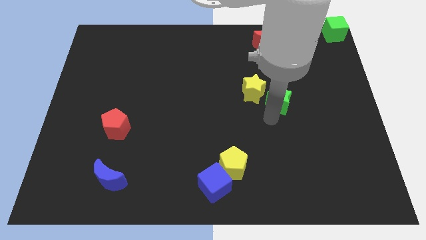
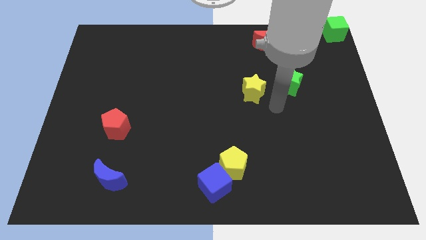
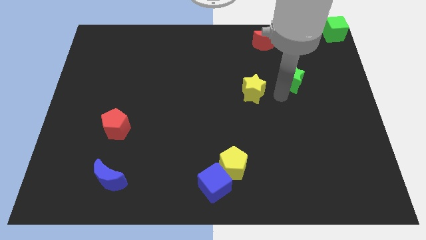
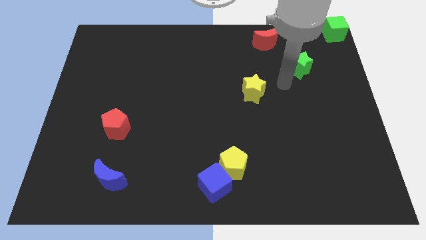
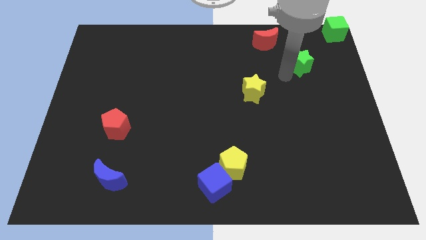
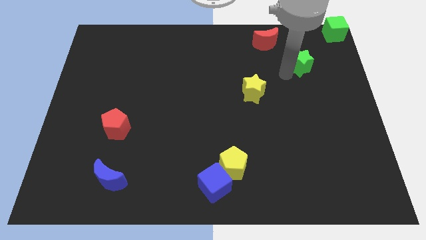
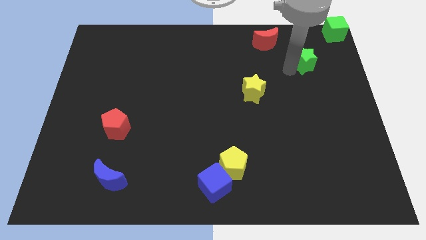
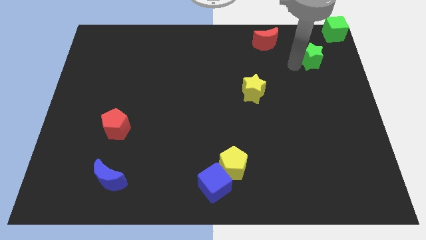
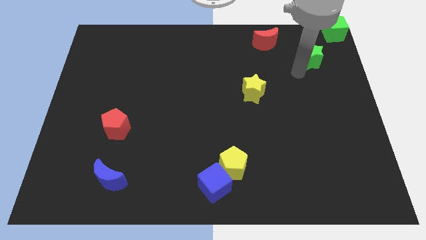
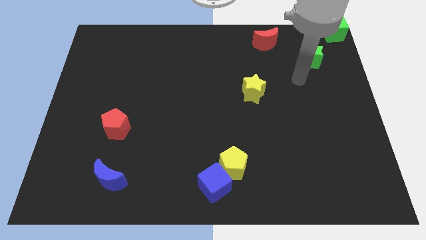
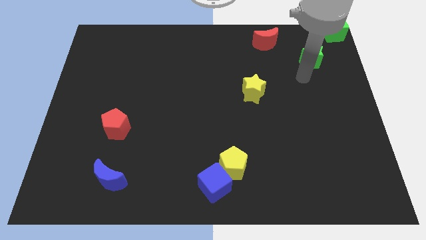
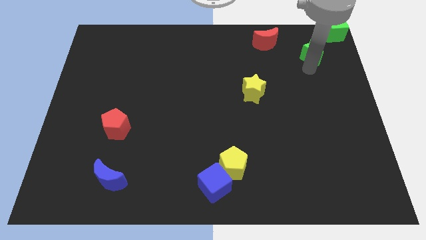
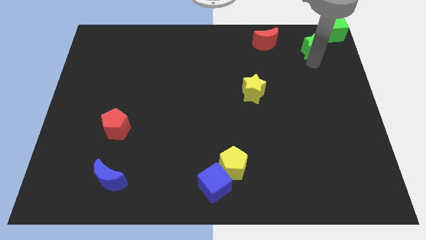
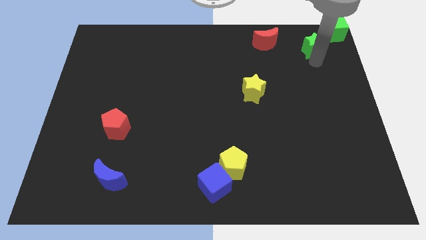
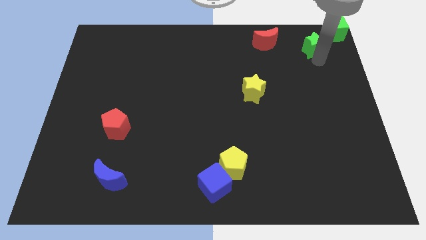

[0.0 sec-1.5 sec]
move the green star to the top right corner of the board

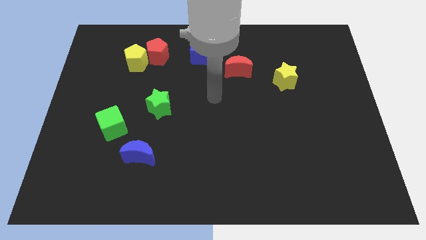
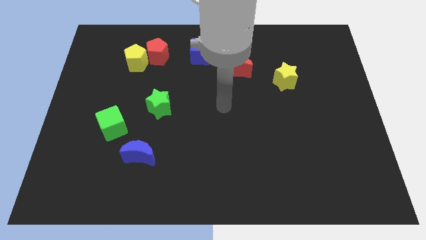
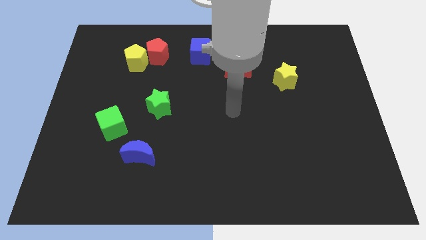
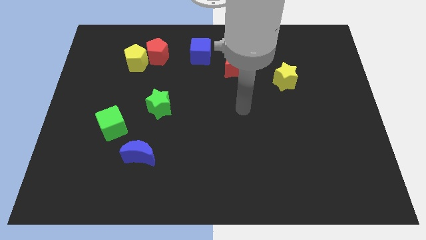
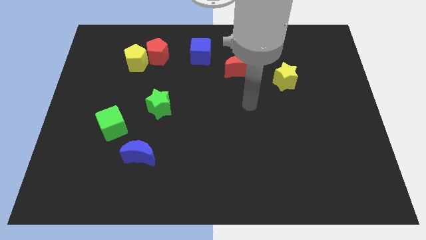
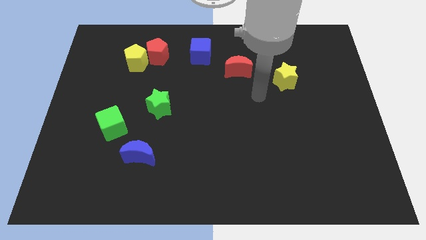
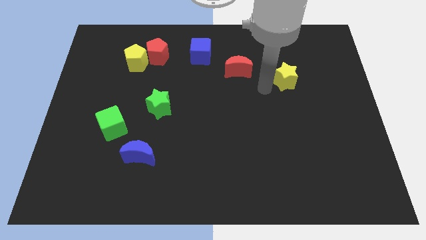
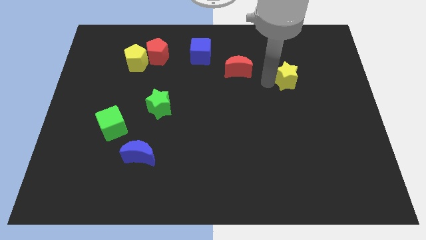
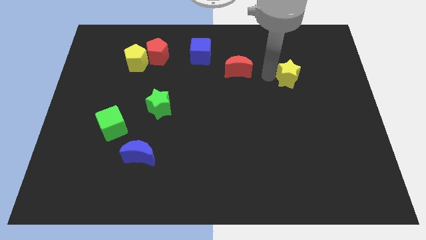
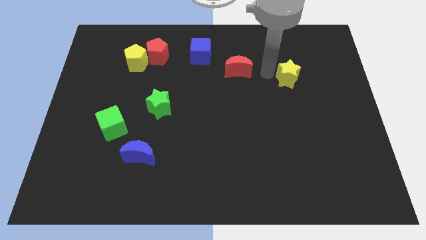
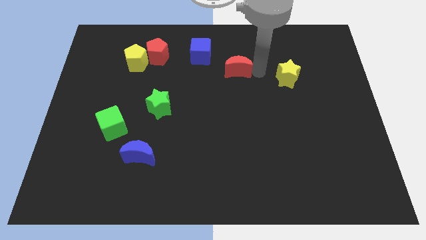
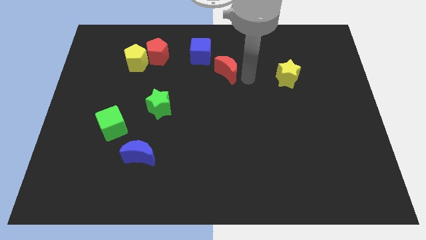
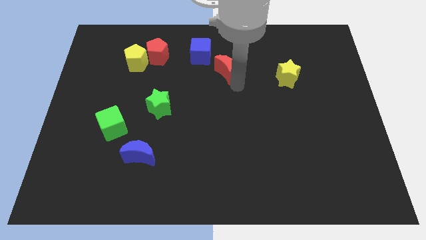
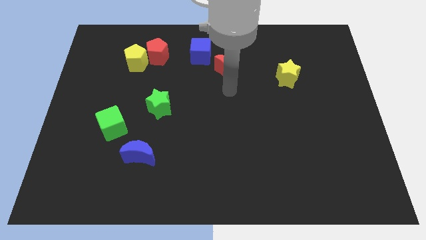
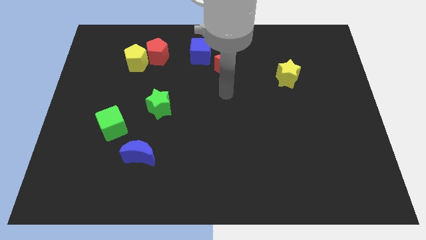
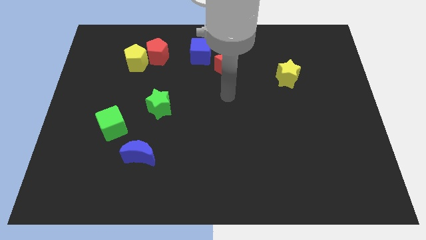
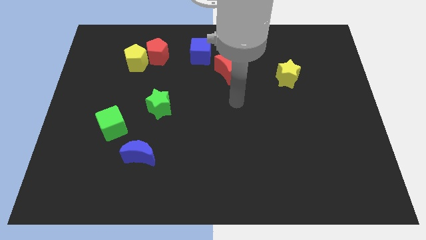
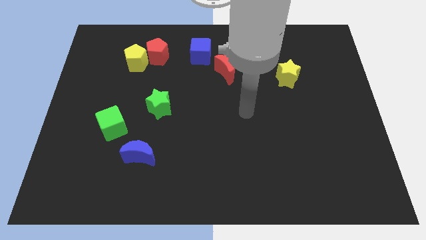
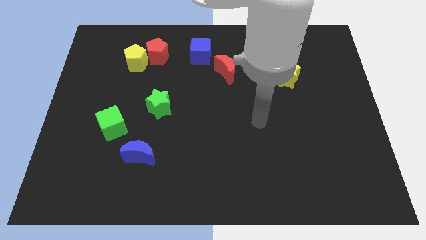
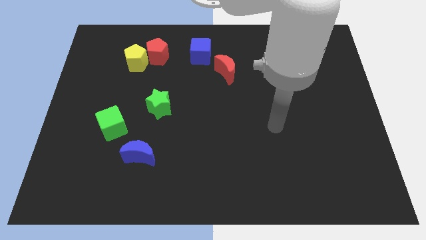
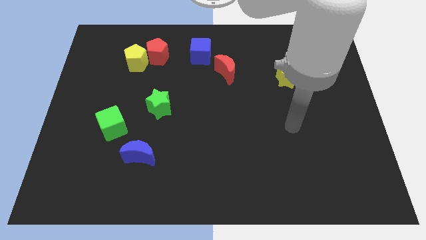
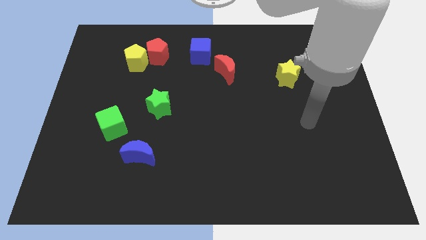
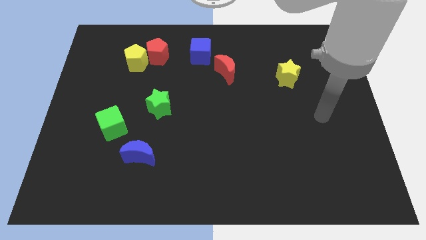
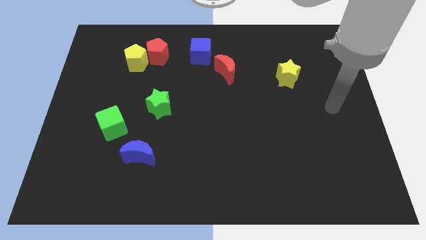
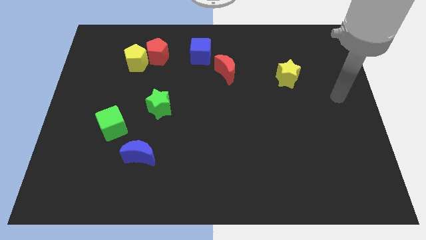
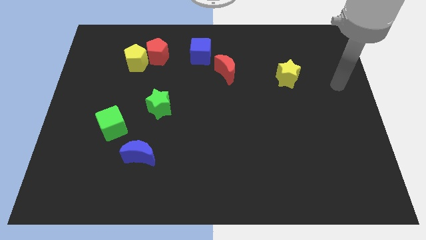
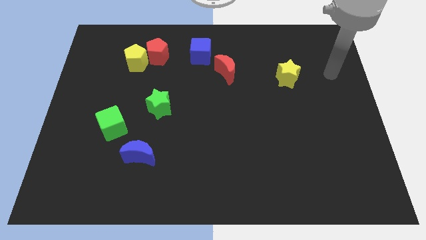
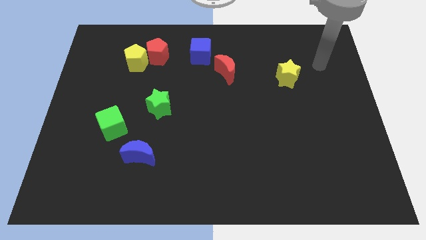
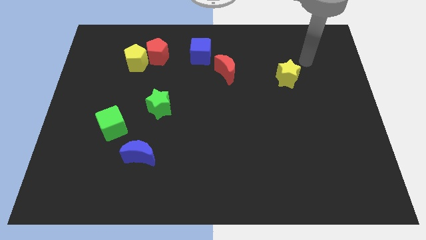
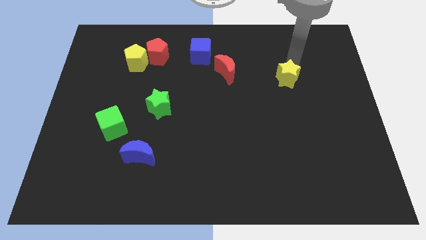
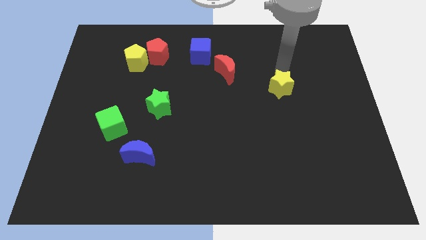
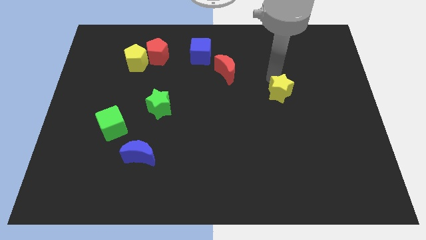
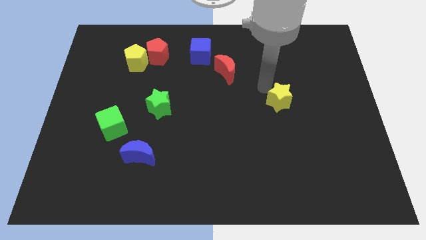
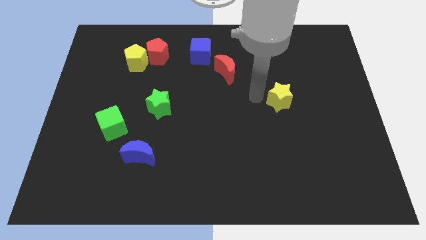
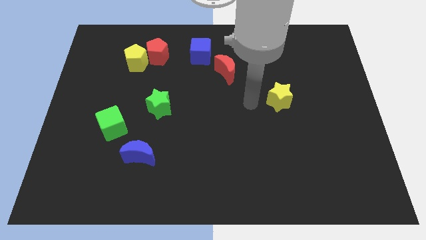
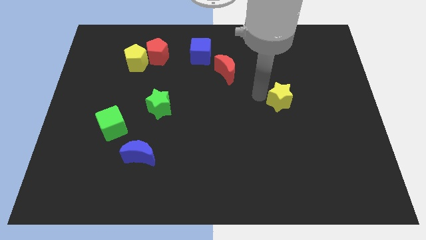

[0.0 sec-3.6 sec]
place the yellow star parallel to the green star

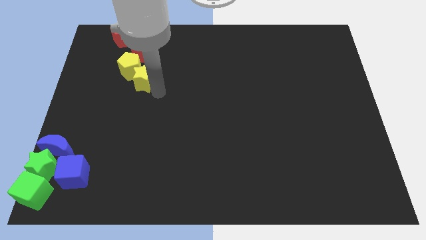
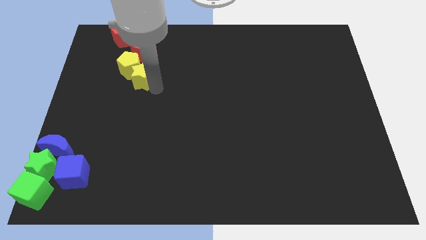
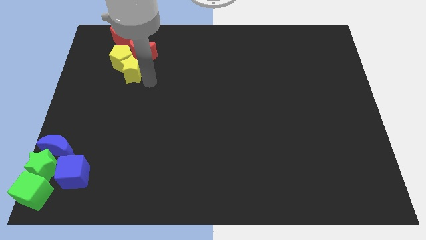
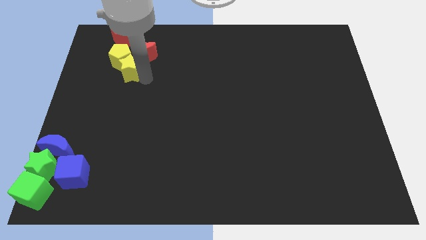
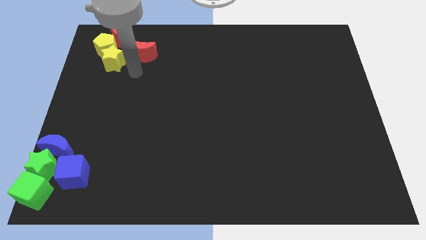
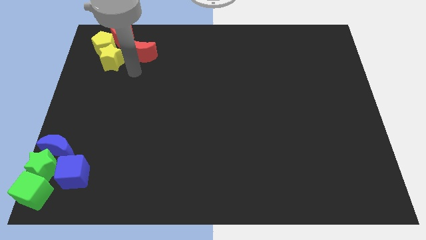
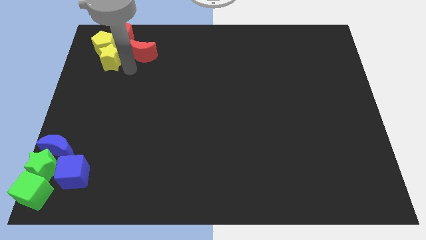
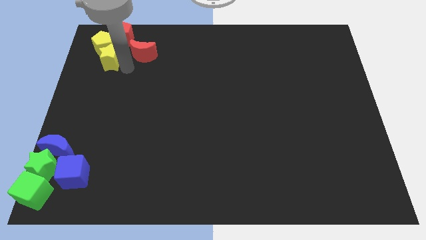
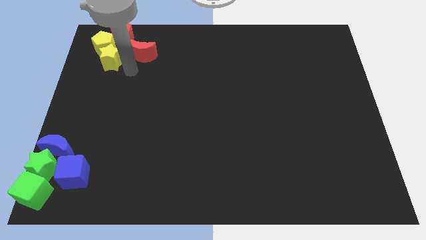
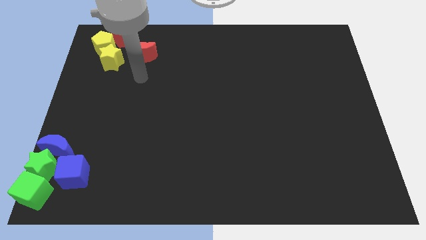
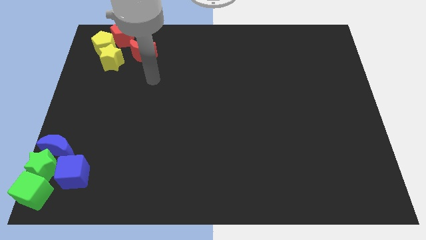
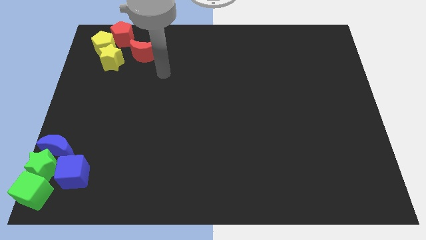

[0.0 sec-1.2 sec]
move the yellow blocks to the left of red blocks

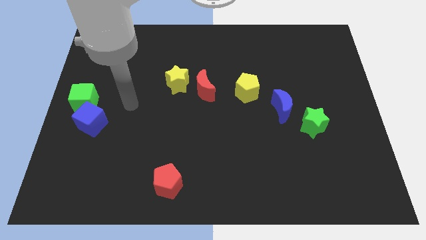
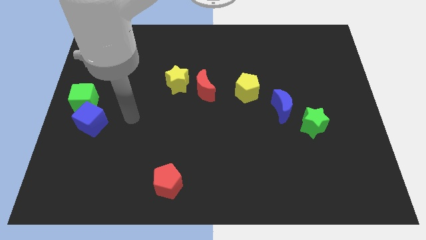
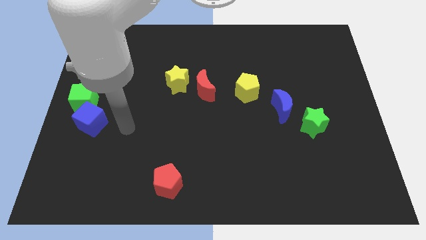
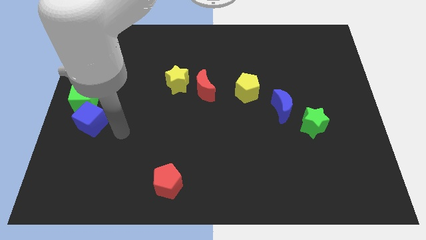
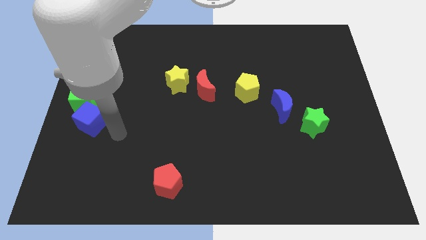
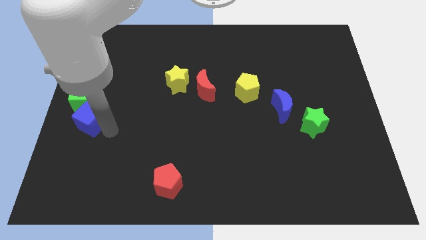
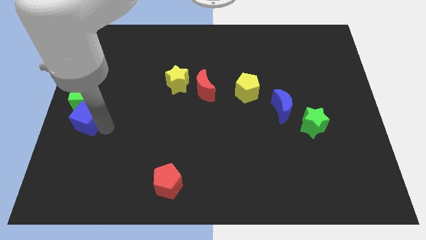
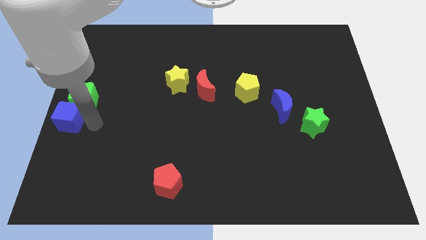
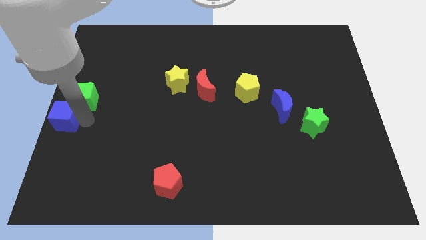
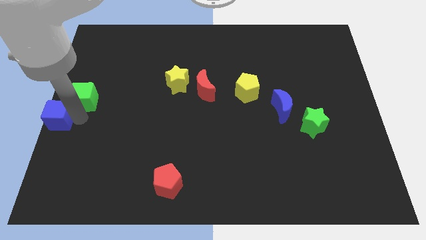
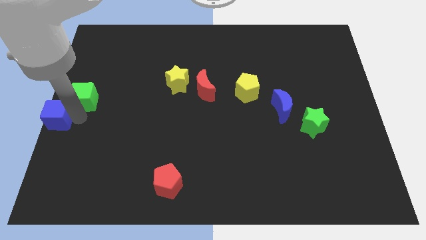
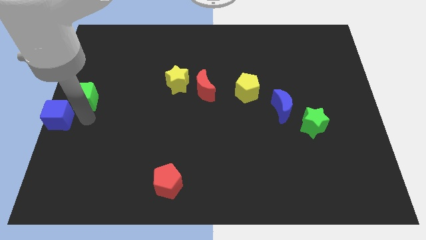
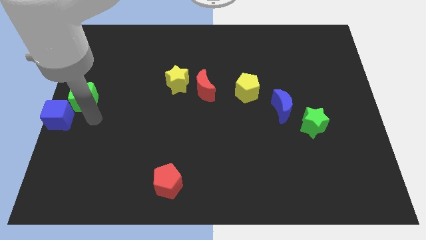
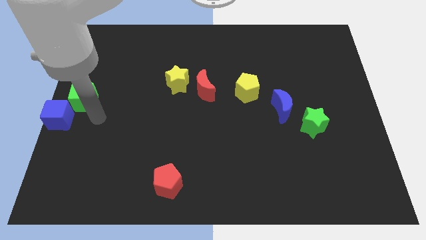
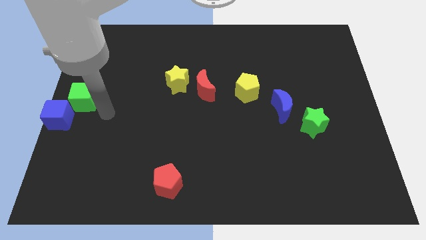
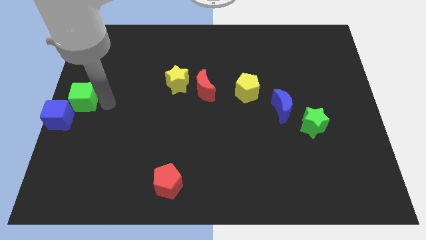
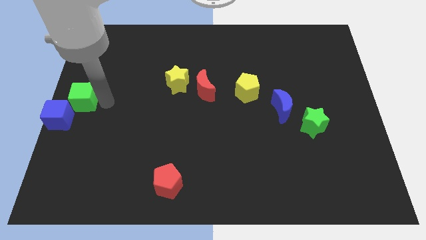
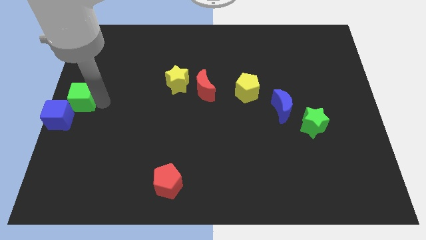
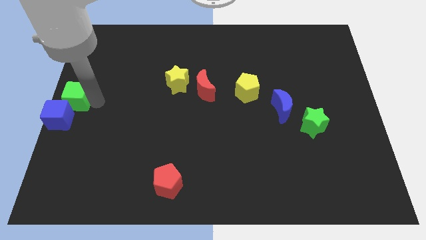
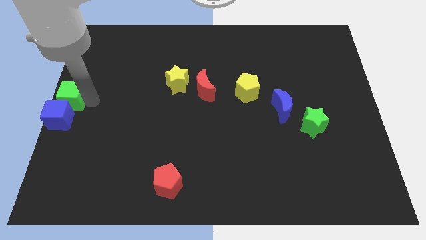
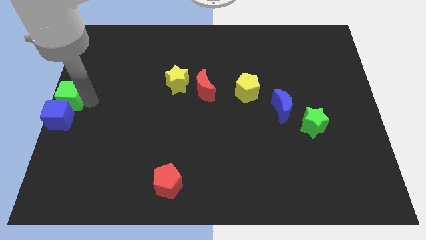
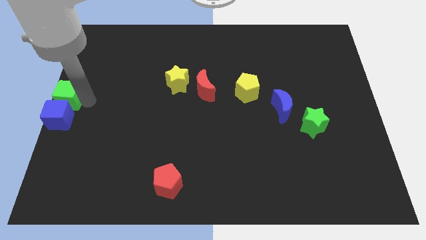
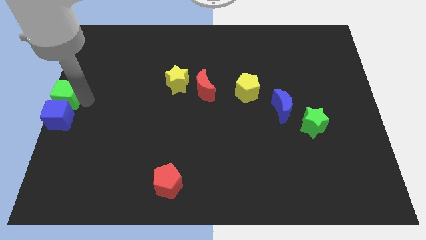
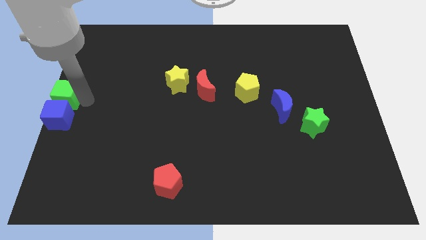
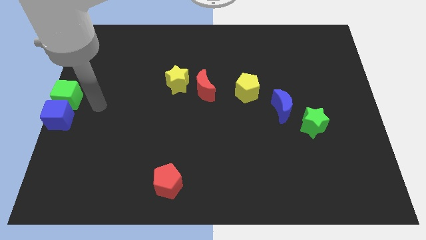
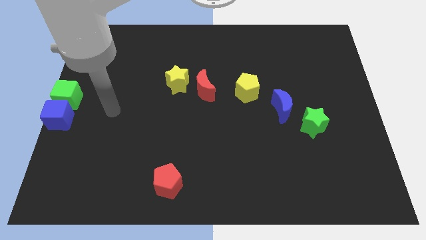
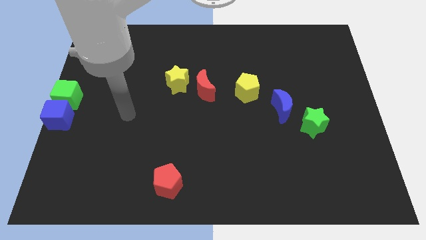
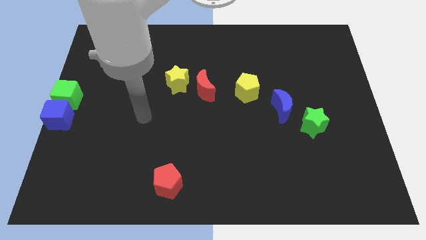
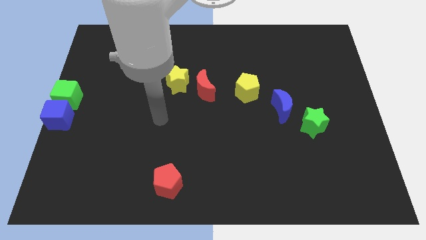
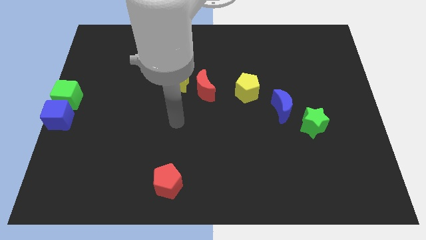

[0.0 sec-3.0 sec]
move the blue cube and green cube to the center left
